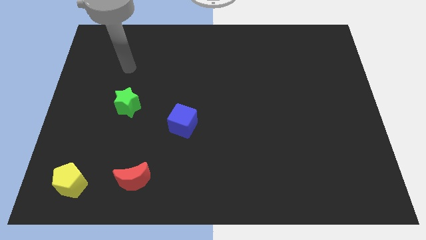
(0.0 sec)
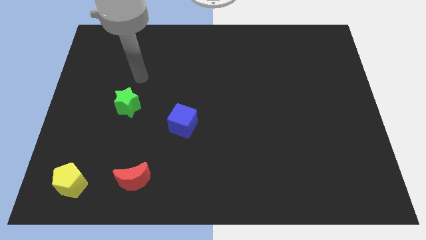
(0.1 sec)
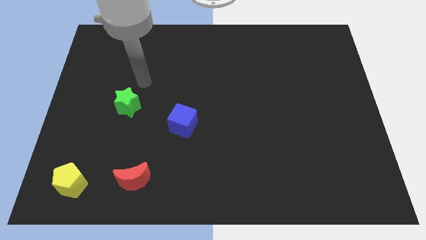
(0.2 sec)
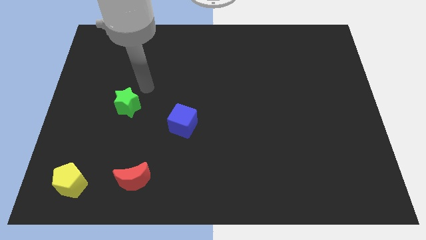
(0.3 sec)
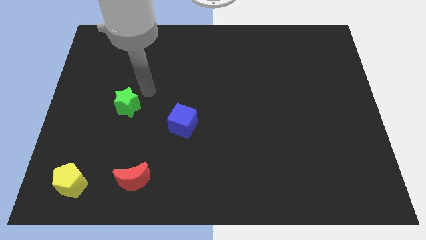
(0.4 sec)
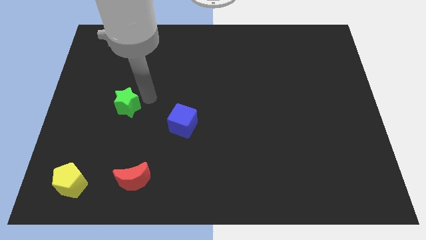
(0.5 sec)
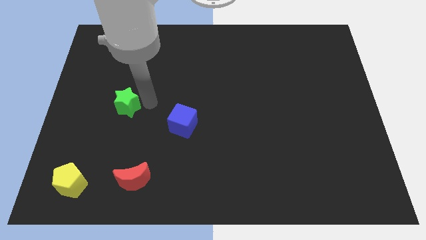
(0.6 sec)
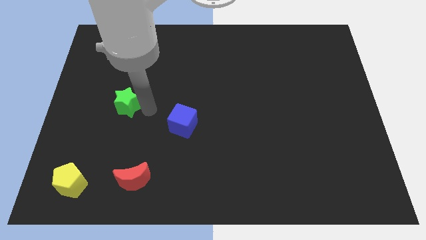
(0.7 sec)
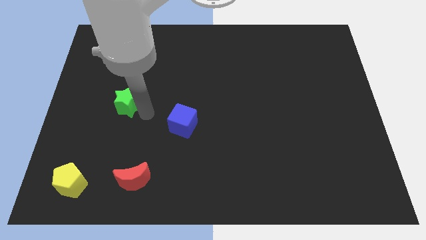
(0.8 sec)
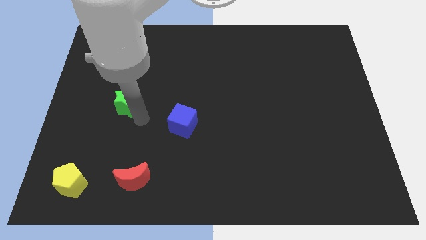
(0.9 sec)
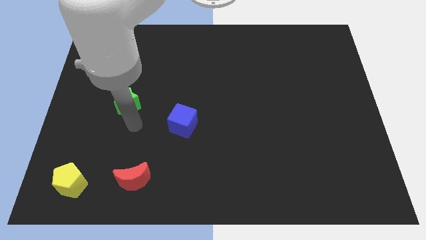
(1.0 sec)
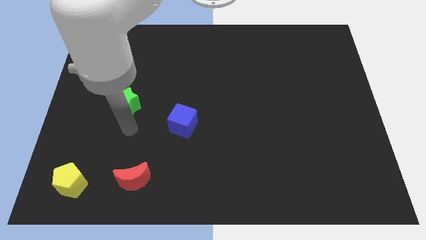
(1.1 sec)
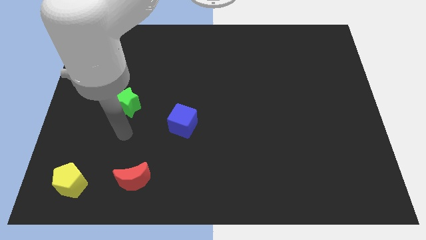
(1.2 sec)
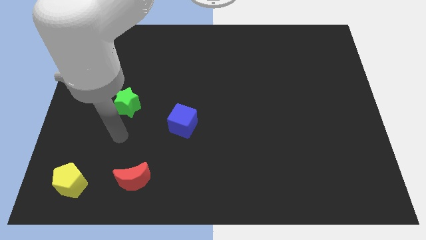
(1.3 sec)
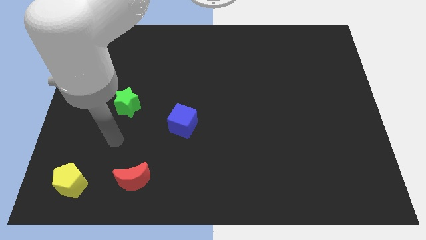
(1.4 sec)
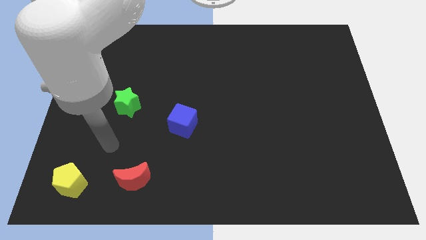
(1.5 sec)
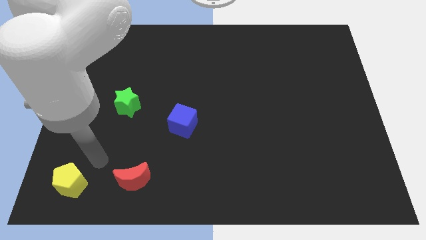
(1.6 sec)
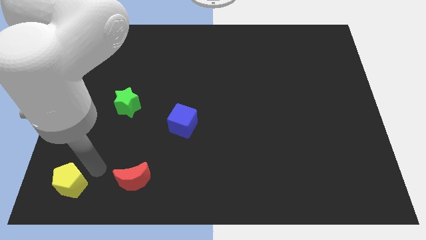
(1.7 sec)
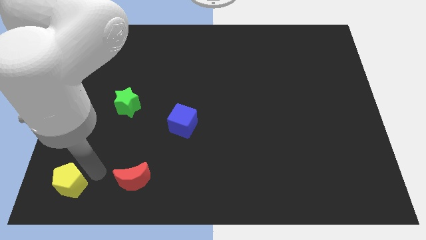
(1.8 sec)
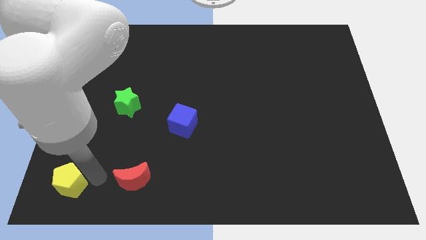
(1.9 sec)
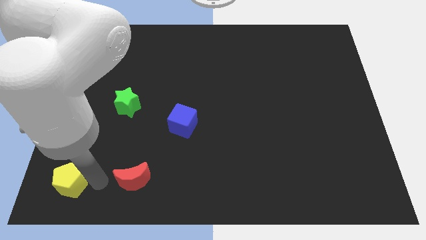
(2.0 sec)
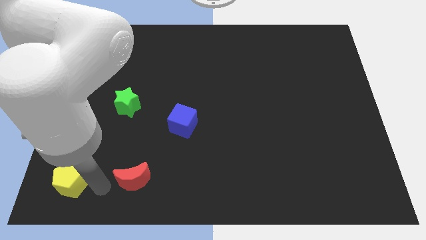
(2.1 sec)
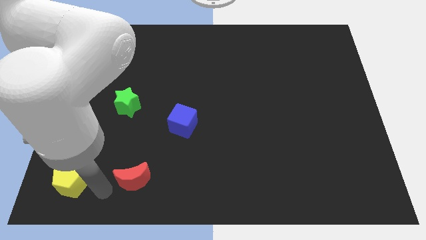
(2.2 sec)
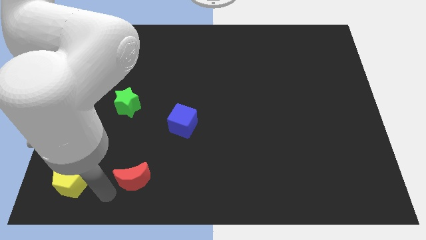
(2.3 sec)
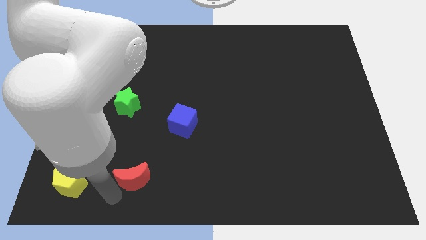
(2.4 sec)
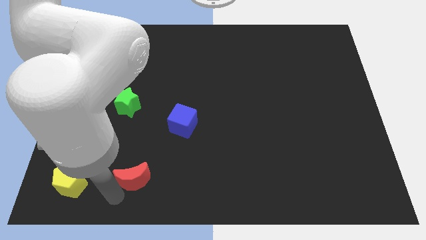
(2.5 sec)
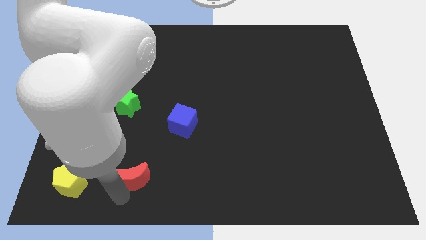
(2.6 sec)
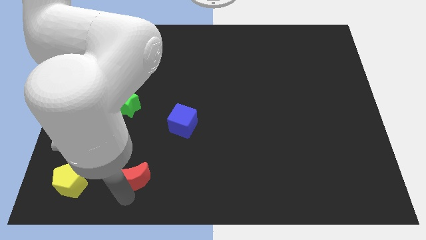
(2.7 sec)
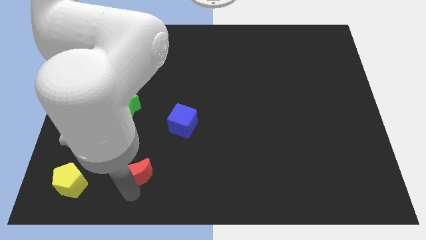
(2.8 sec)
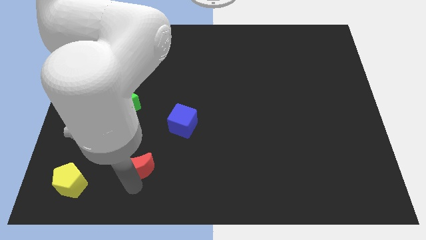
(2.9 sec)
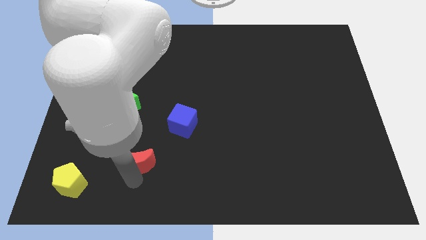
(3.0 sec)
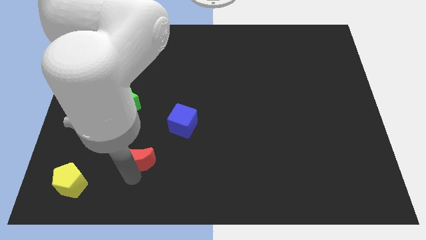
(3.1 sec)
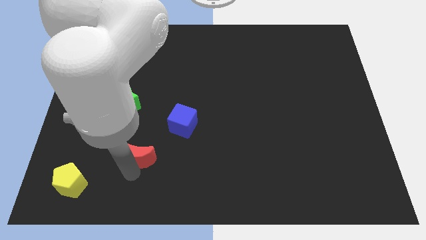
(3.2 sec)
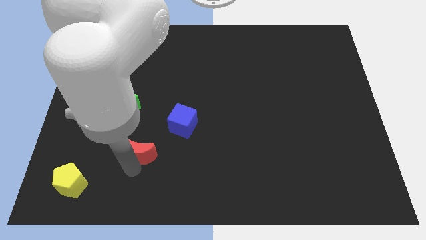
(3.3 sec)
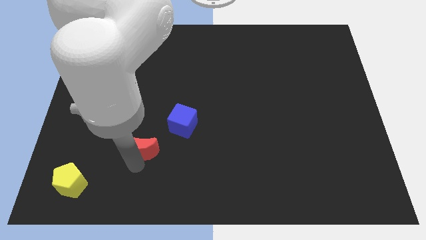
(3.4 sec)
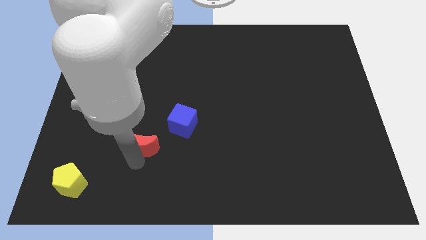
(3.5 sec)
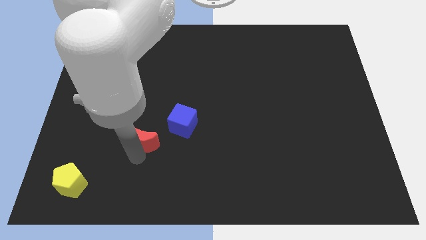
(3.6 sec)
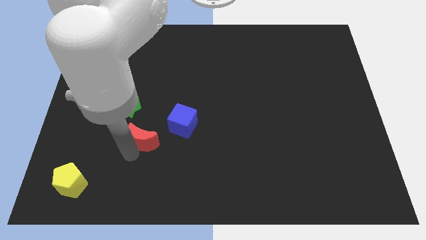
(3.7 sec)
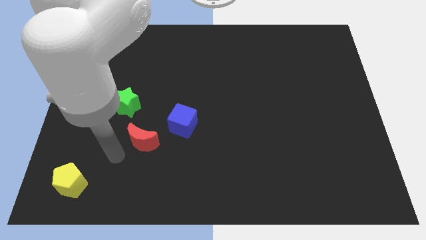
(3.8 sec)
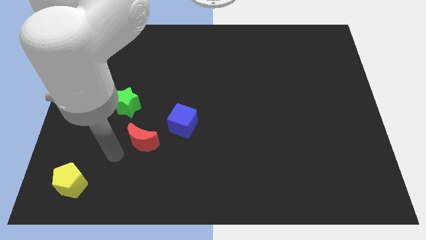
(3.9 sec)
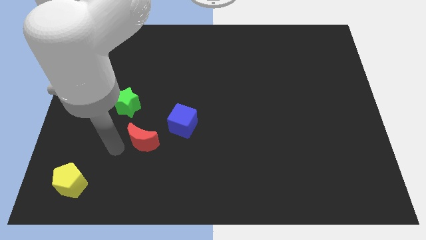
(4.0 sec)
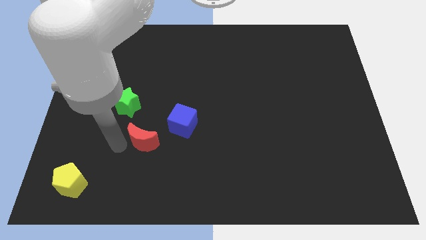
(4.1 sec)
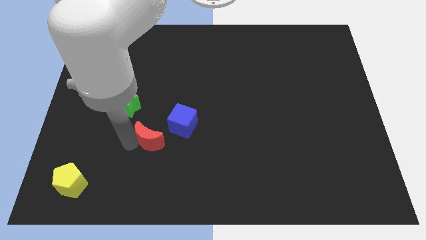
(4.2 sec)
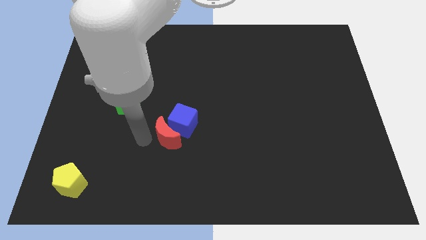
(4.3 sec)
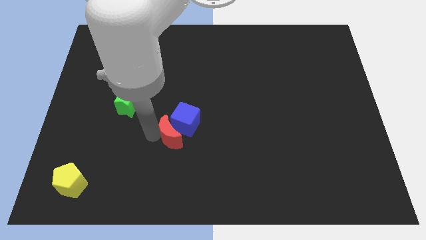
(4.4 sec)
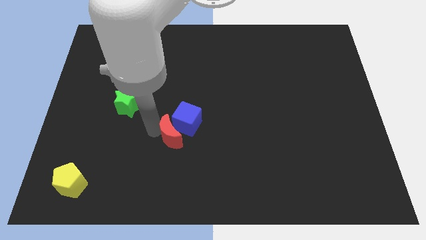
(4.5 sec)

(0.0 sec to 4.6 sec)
put the moon close to the cube

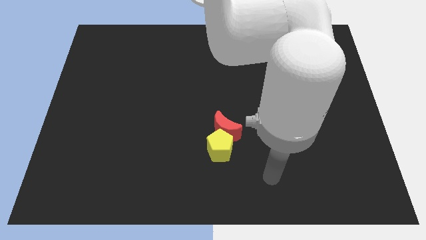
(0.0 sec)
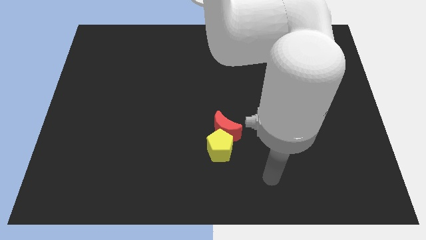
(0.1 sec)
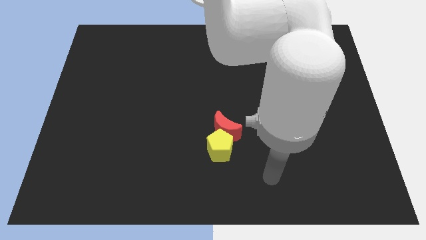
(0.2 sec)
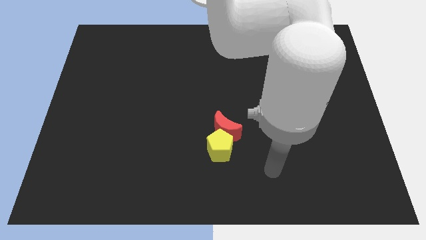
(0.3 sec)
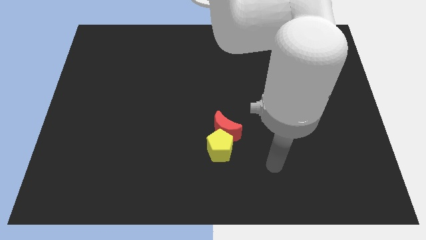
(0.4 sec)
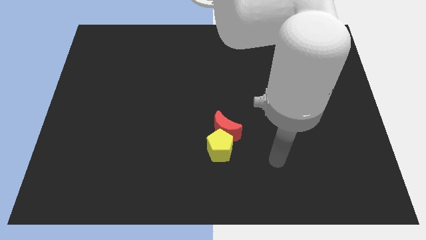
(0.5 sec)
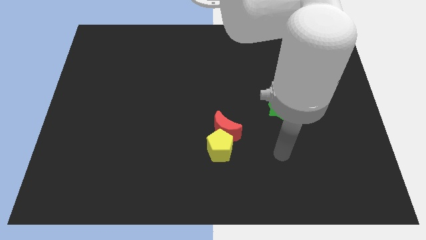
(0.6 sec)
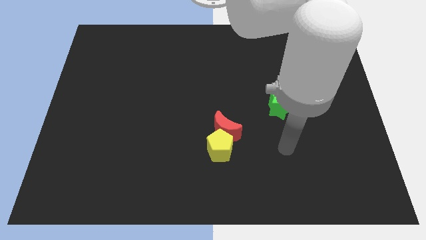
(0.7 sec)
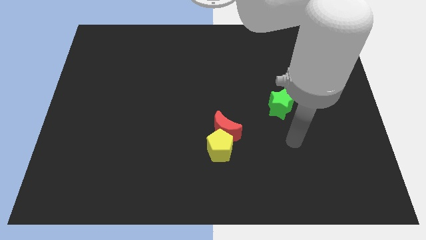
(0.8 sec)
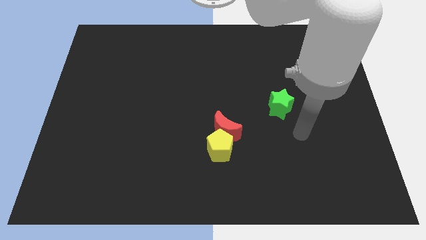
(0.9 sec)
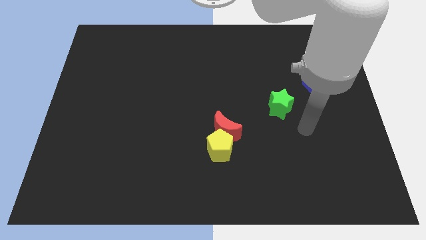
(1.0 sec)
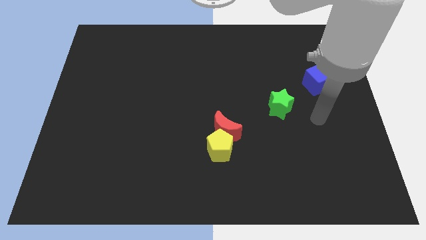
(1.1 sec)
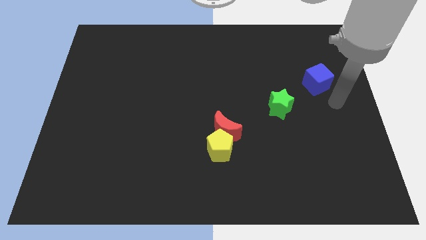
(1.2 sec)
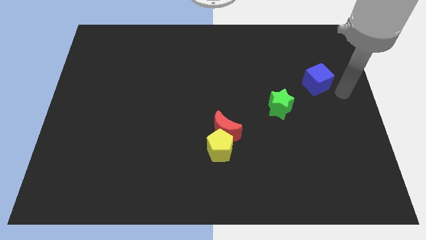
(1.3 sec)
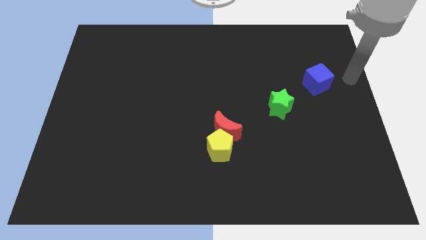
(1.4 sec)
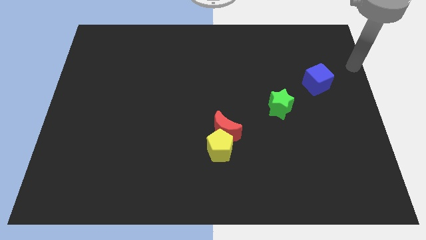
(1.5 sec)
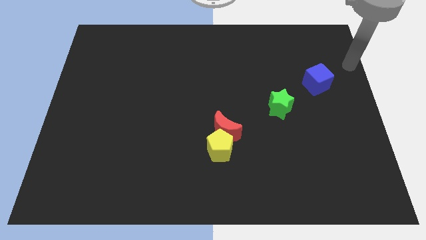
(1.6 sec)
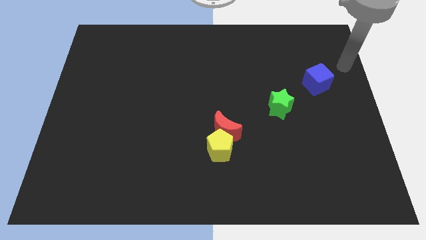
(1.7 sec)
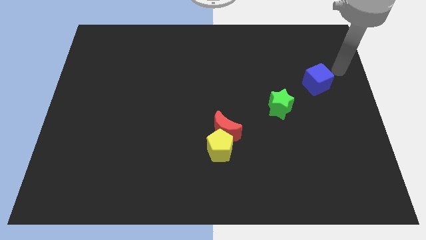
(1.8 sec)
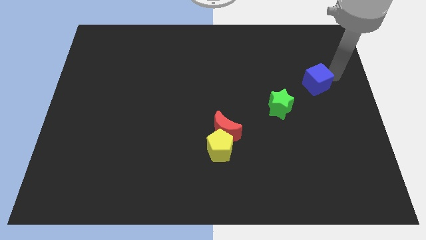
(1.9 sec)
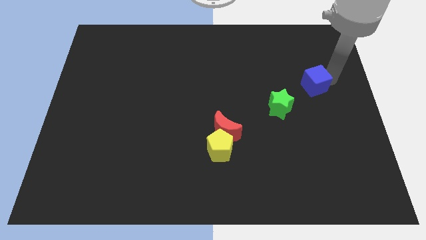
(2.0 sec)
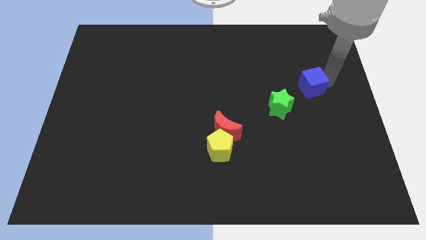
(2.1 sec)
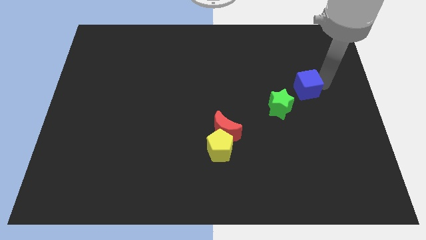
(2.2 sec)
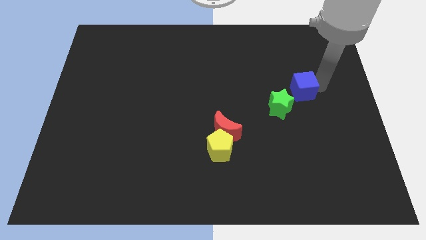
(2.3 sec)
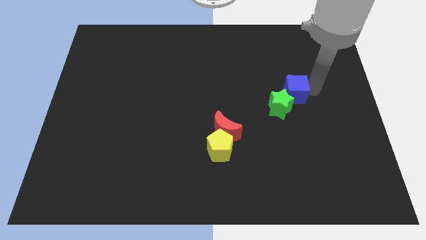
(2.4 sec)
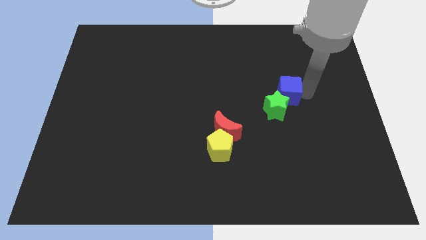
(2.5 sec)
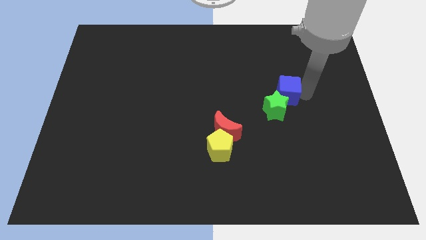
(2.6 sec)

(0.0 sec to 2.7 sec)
put the blue block next to the green star

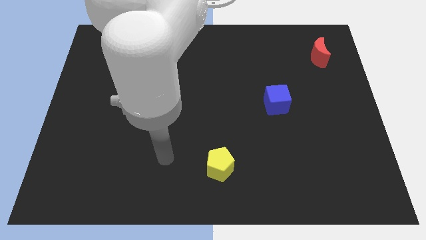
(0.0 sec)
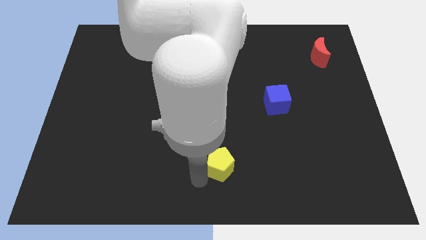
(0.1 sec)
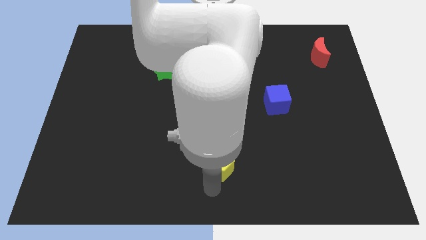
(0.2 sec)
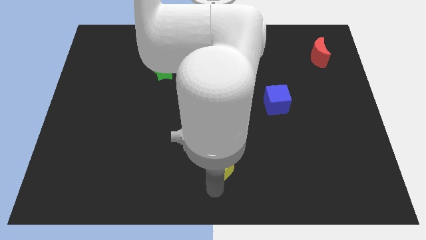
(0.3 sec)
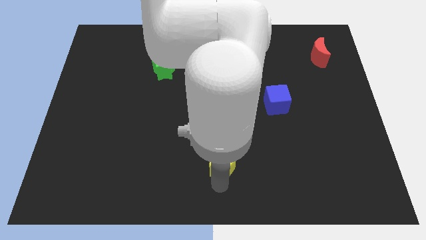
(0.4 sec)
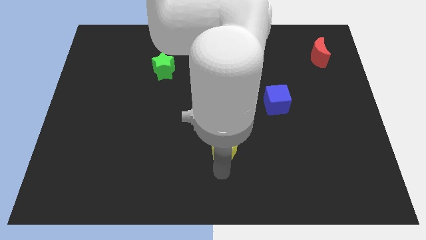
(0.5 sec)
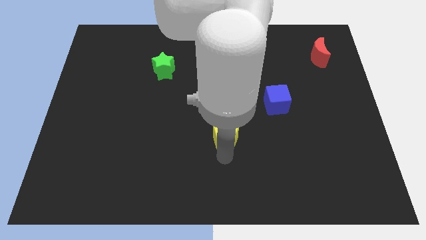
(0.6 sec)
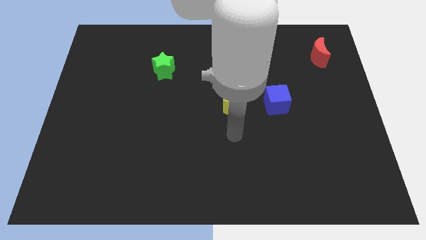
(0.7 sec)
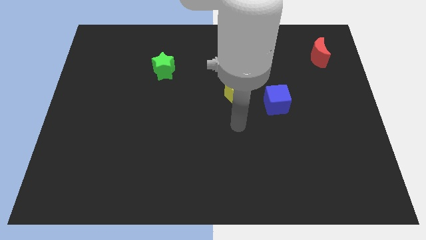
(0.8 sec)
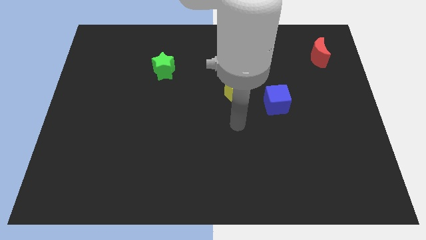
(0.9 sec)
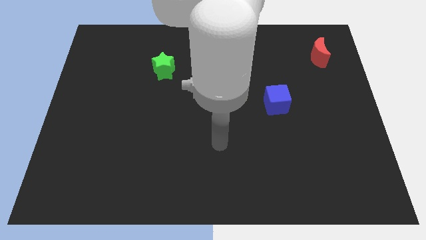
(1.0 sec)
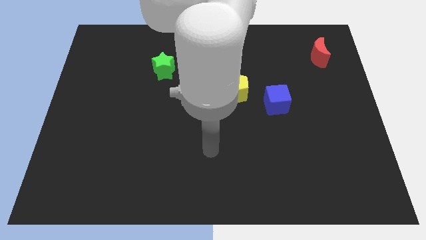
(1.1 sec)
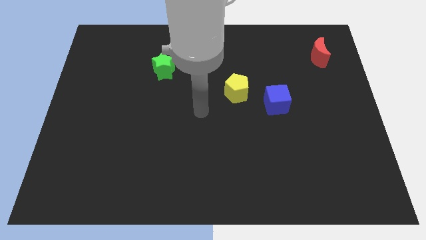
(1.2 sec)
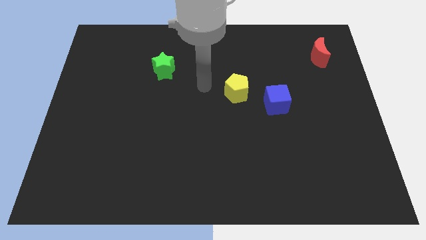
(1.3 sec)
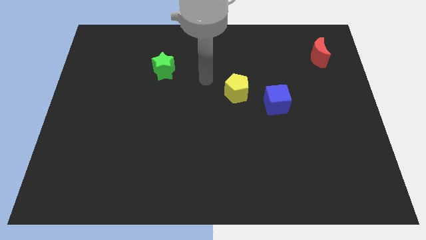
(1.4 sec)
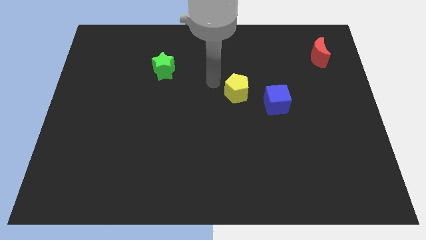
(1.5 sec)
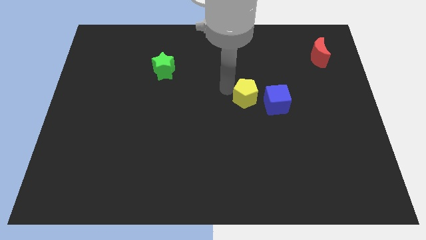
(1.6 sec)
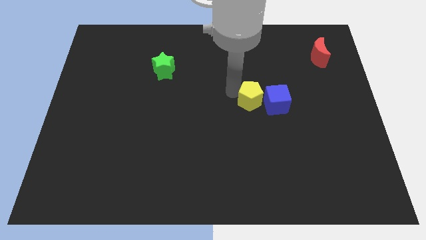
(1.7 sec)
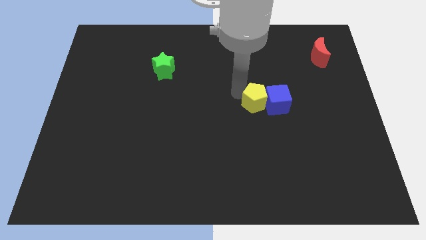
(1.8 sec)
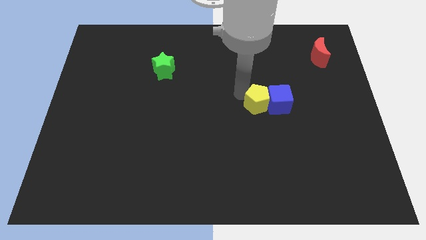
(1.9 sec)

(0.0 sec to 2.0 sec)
push the yellow pentagon to the blue cube
